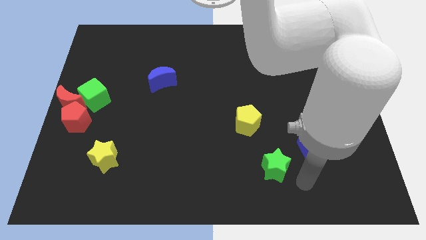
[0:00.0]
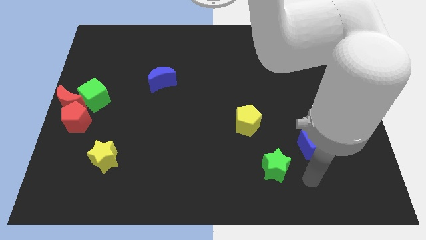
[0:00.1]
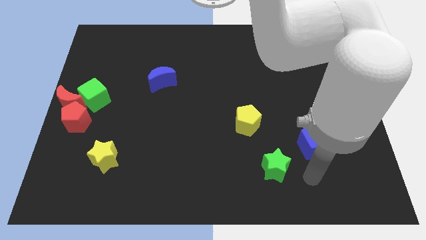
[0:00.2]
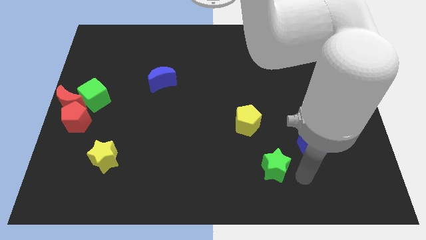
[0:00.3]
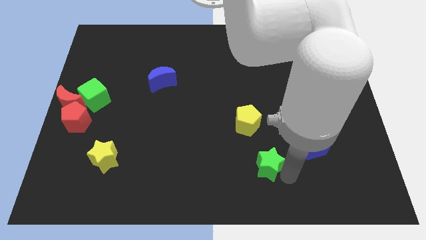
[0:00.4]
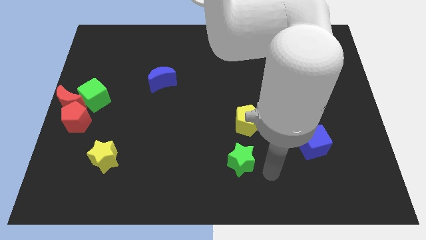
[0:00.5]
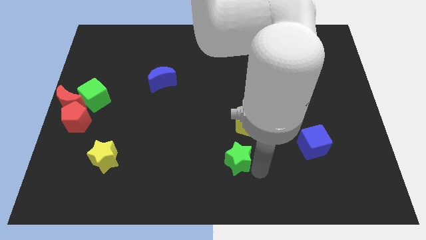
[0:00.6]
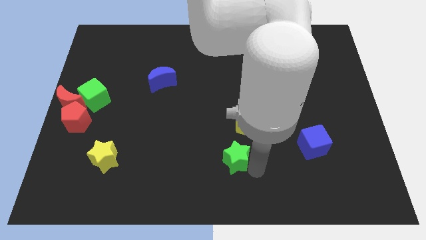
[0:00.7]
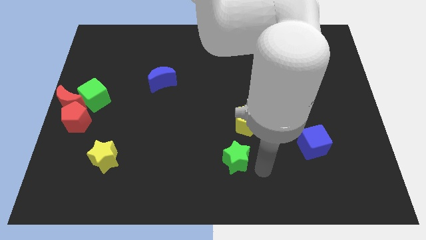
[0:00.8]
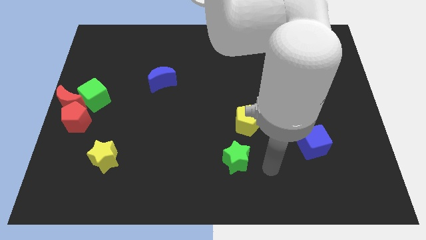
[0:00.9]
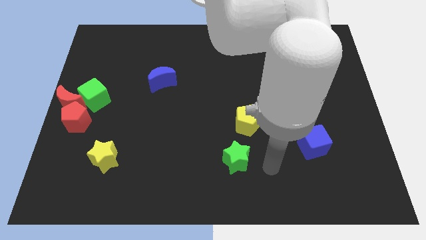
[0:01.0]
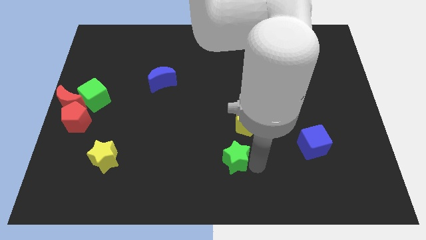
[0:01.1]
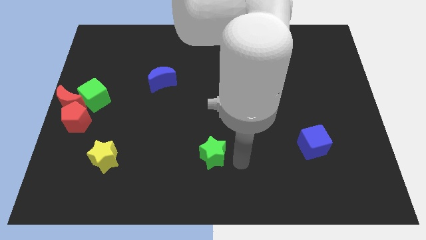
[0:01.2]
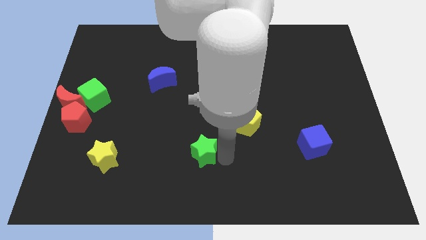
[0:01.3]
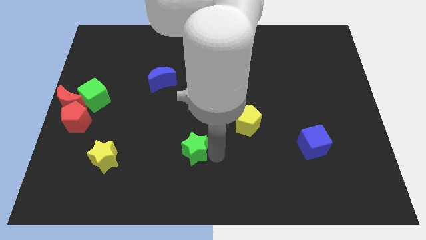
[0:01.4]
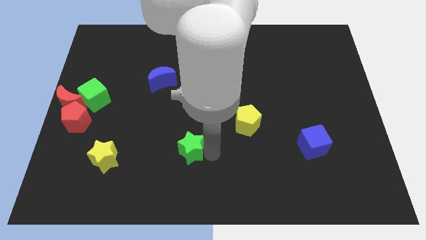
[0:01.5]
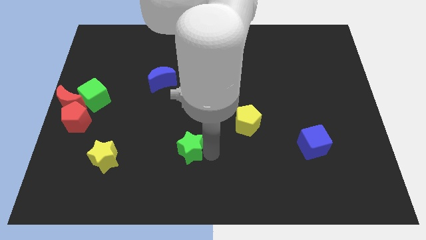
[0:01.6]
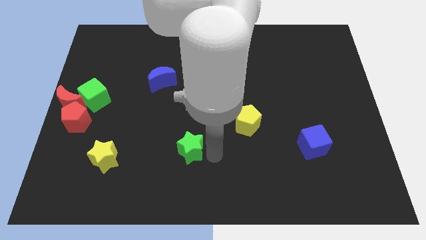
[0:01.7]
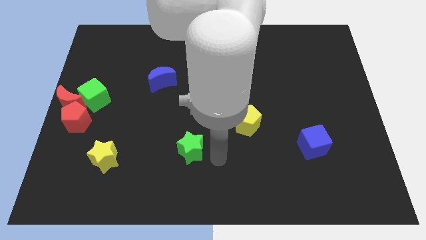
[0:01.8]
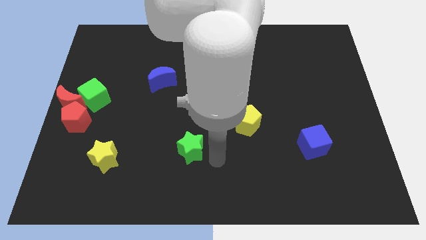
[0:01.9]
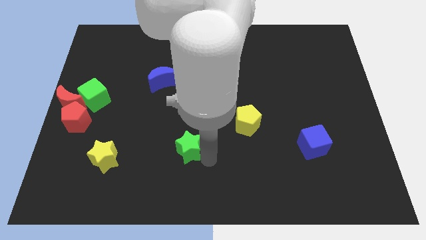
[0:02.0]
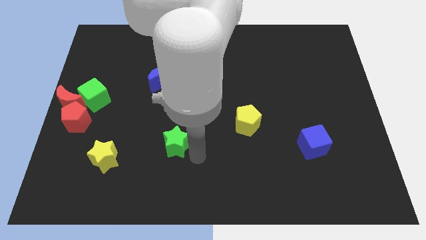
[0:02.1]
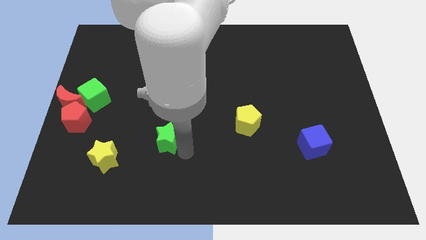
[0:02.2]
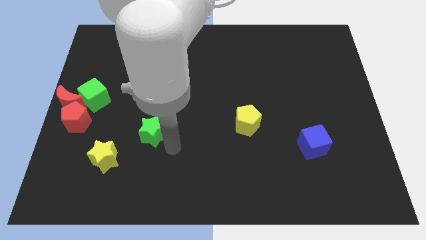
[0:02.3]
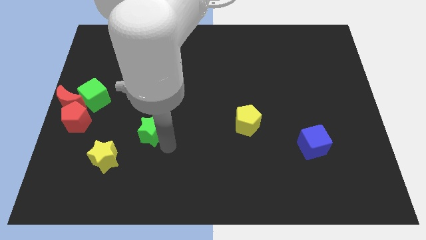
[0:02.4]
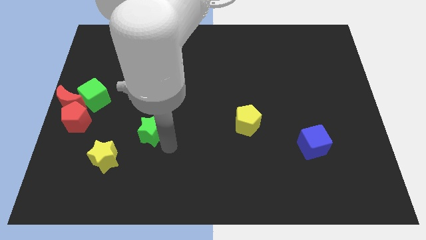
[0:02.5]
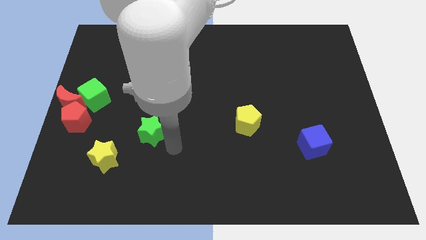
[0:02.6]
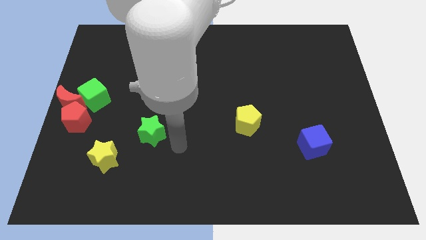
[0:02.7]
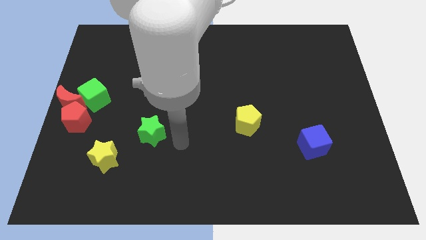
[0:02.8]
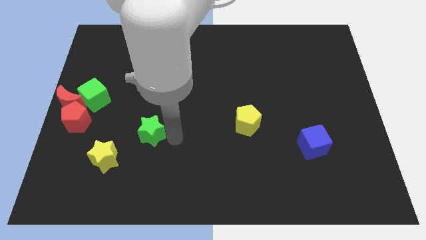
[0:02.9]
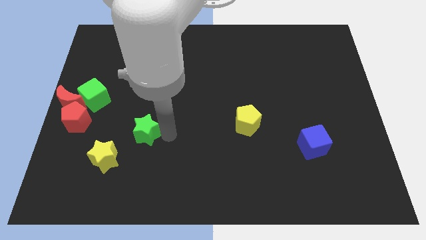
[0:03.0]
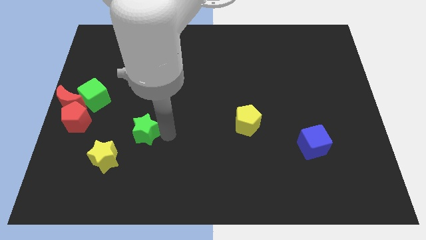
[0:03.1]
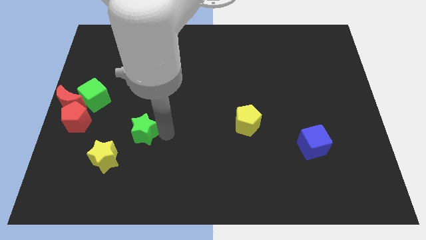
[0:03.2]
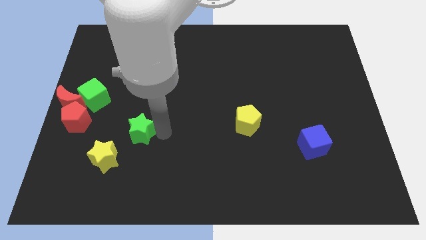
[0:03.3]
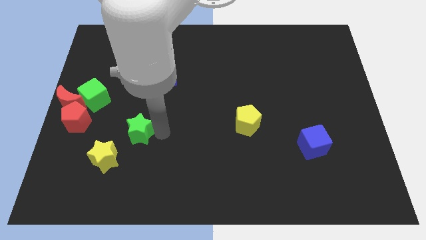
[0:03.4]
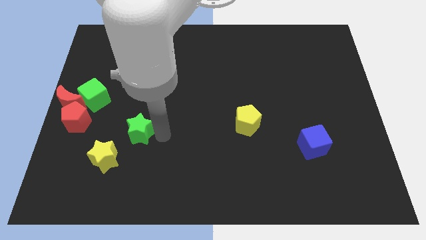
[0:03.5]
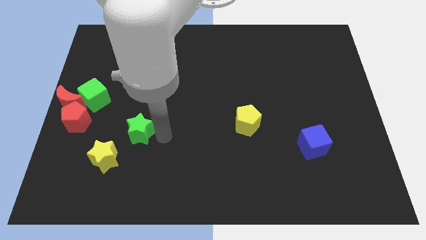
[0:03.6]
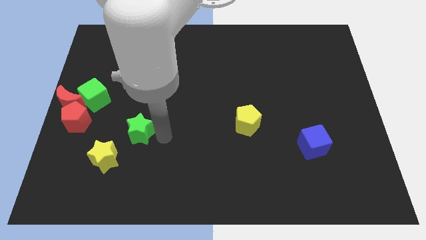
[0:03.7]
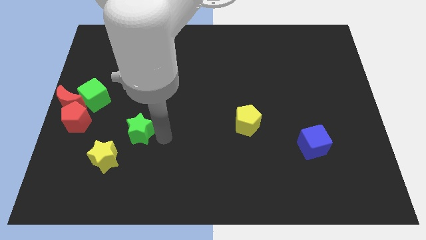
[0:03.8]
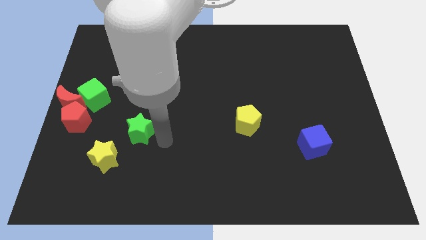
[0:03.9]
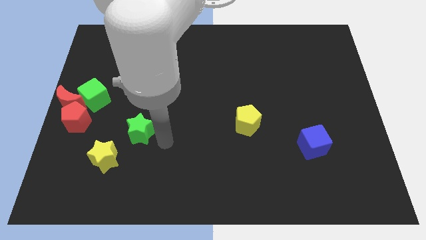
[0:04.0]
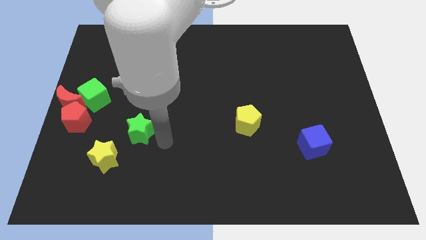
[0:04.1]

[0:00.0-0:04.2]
move the green star slightly to the left of the board

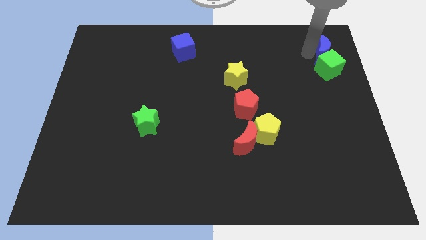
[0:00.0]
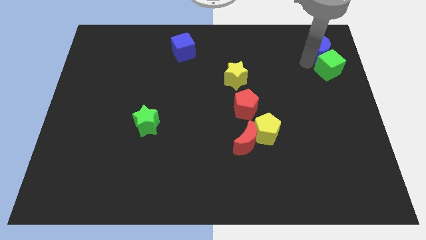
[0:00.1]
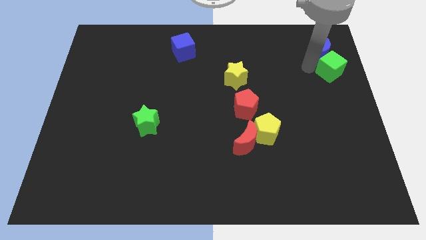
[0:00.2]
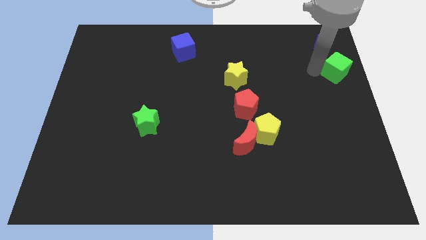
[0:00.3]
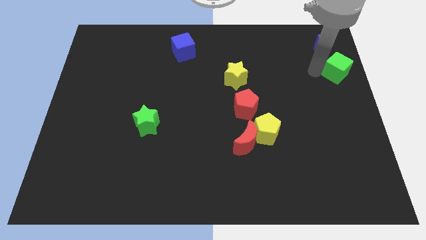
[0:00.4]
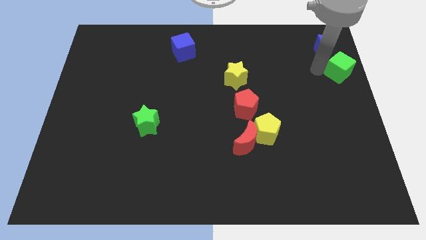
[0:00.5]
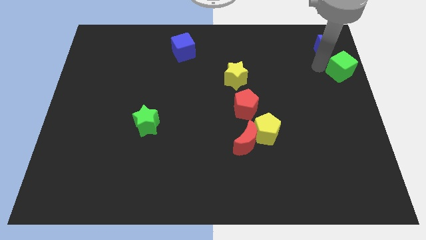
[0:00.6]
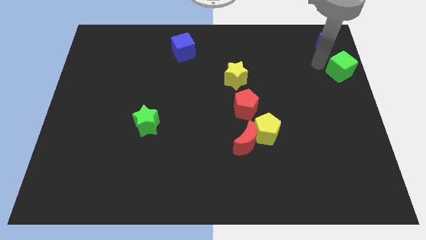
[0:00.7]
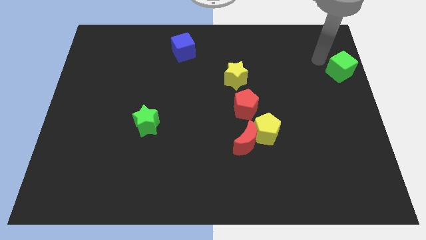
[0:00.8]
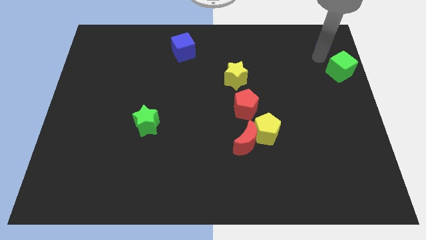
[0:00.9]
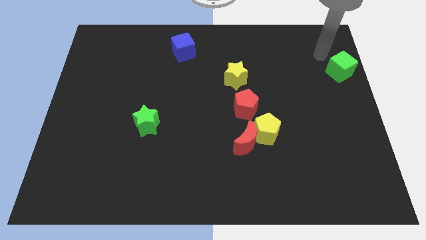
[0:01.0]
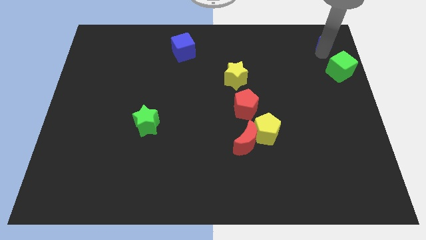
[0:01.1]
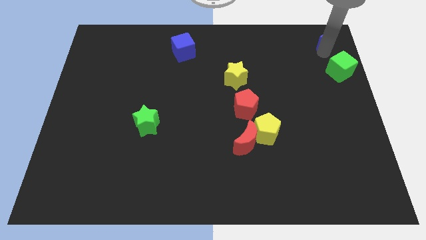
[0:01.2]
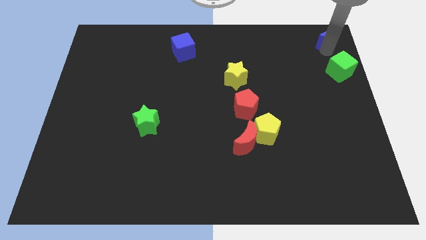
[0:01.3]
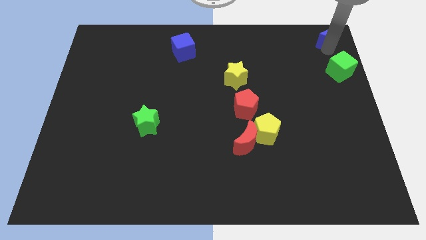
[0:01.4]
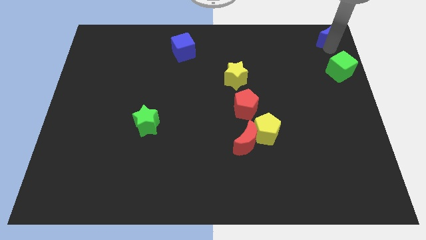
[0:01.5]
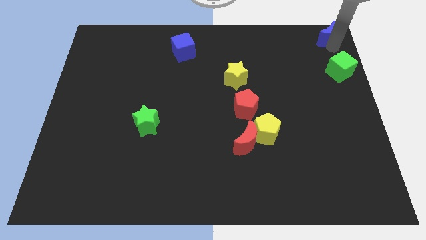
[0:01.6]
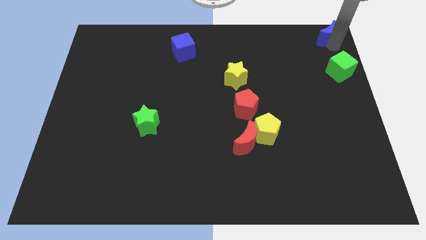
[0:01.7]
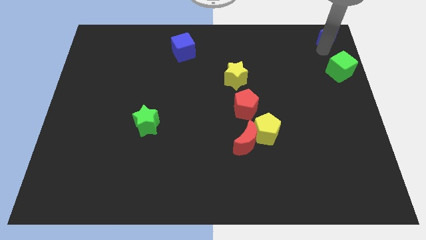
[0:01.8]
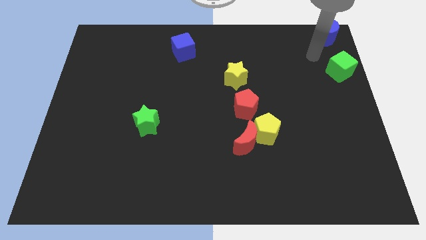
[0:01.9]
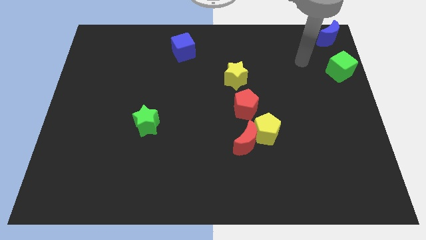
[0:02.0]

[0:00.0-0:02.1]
push the blue moon to the top right corner

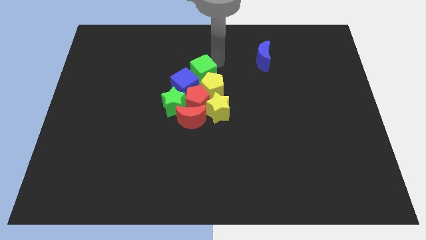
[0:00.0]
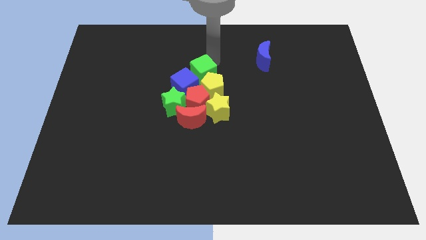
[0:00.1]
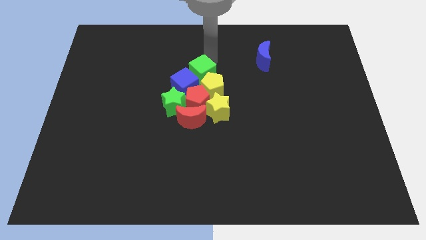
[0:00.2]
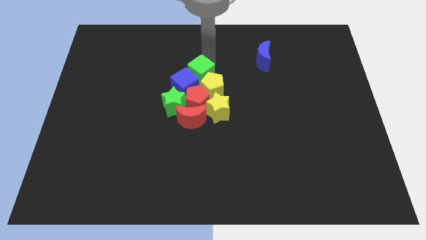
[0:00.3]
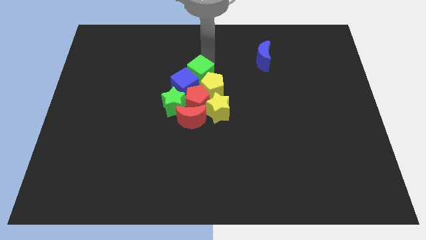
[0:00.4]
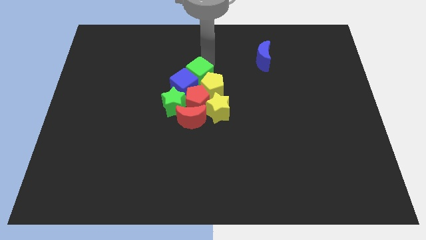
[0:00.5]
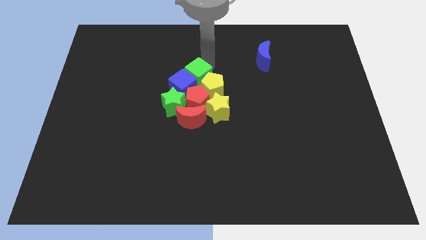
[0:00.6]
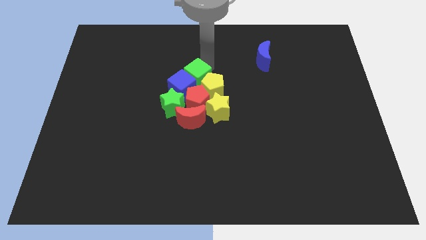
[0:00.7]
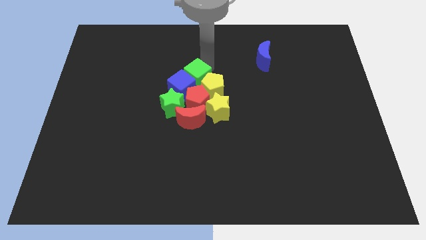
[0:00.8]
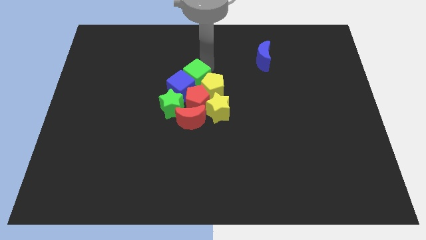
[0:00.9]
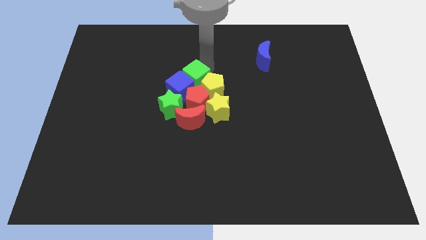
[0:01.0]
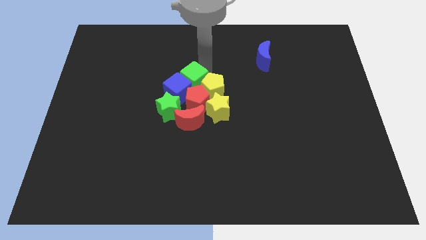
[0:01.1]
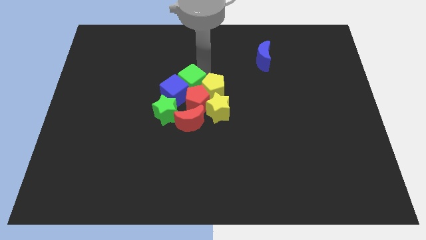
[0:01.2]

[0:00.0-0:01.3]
move the green cube into the group of blocks

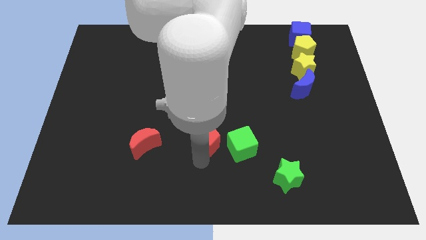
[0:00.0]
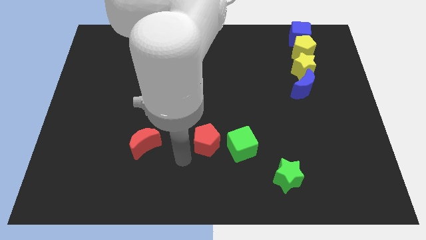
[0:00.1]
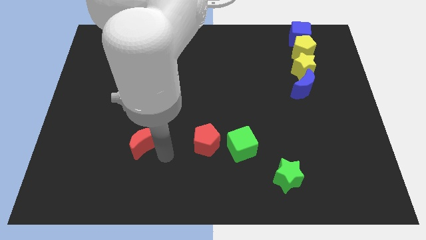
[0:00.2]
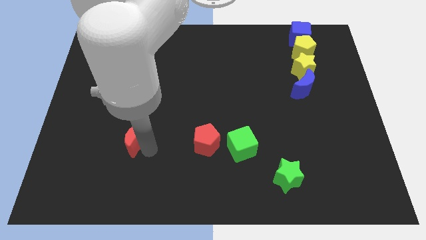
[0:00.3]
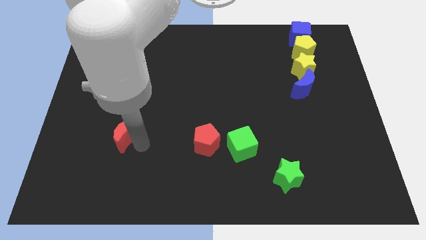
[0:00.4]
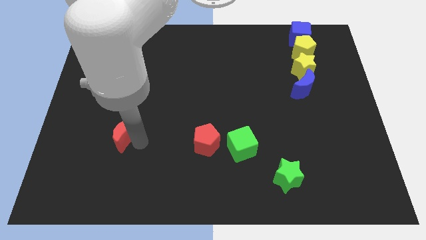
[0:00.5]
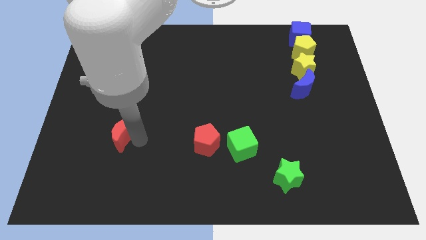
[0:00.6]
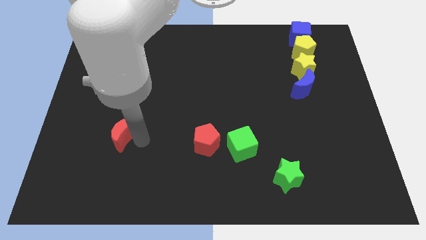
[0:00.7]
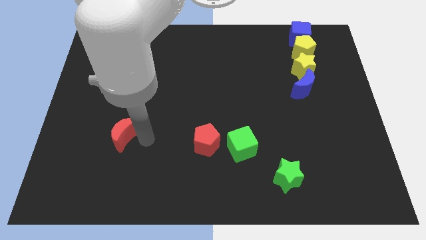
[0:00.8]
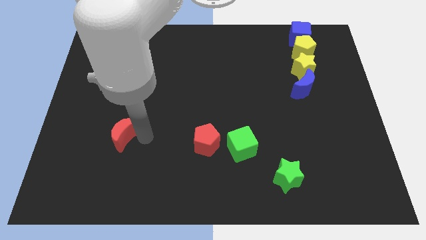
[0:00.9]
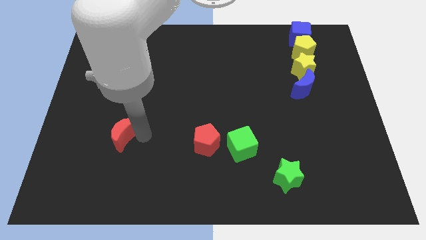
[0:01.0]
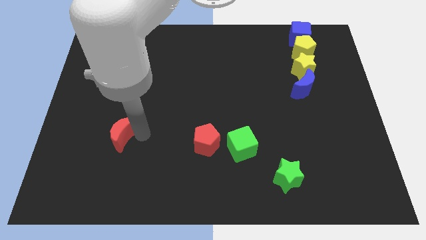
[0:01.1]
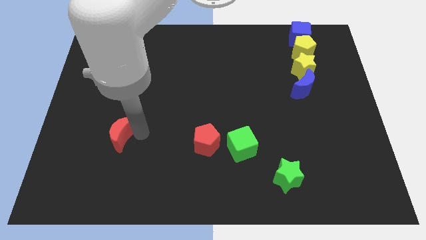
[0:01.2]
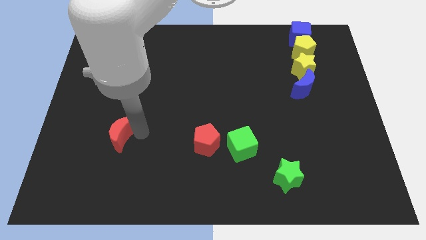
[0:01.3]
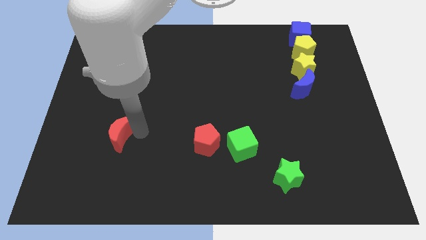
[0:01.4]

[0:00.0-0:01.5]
move the red crescent slightly to the left

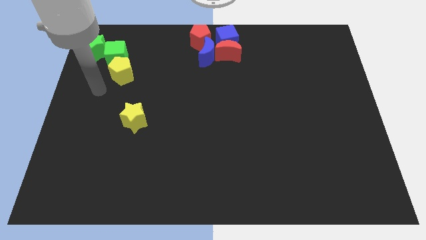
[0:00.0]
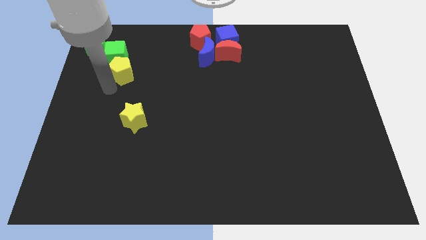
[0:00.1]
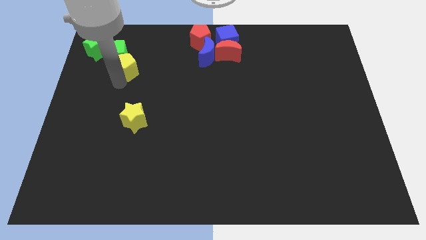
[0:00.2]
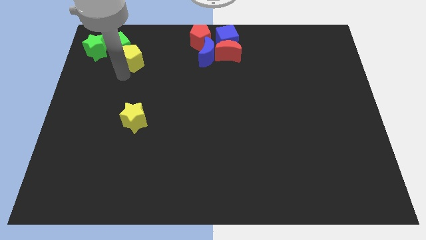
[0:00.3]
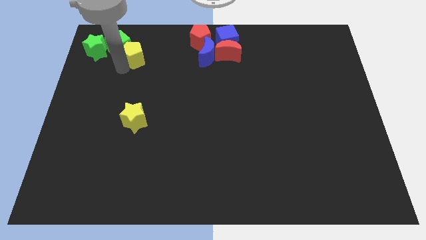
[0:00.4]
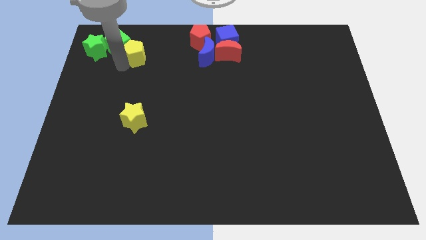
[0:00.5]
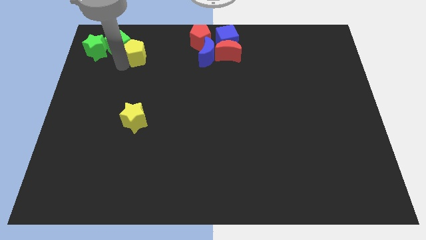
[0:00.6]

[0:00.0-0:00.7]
slightly move the yellow pentagon up
